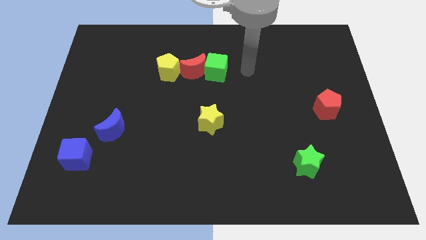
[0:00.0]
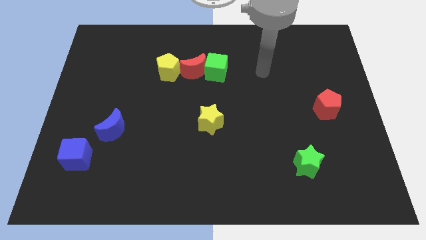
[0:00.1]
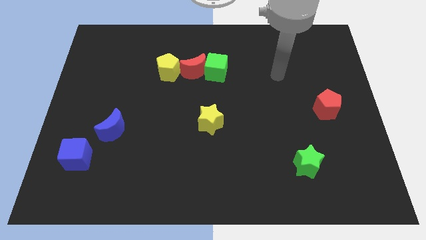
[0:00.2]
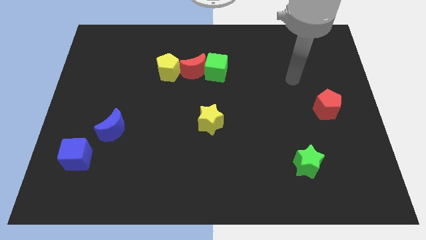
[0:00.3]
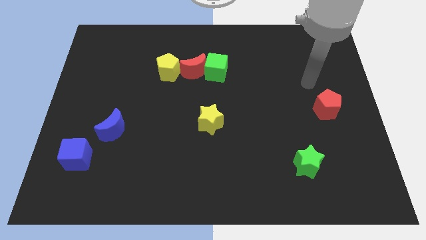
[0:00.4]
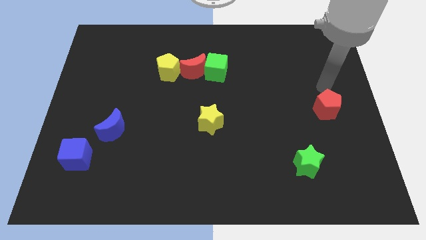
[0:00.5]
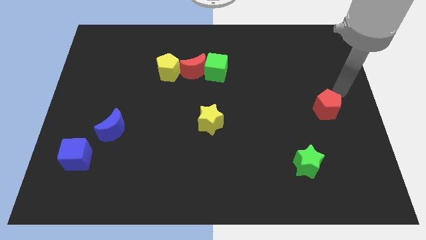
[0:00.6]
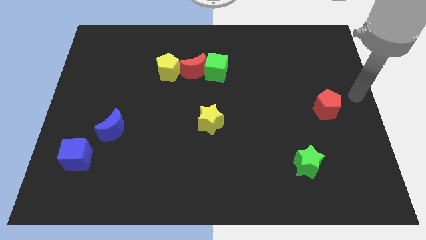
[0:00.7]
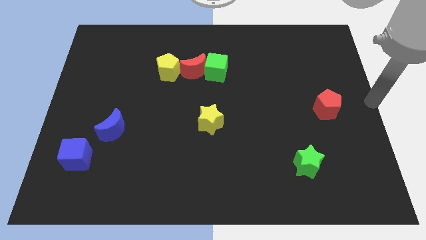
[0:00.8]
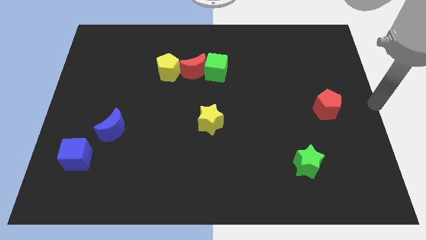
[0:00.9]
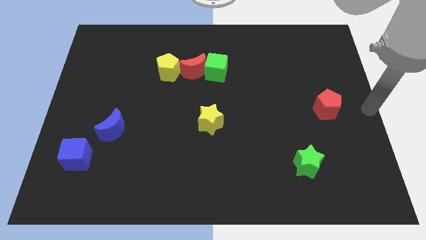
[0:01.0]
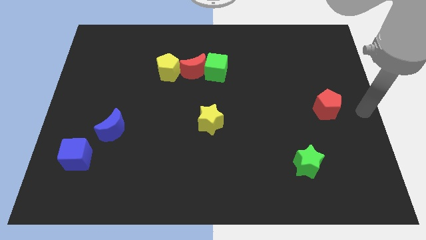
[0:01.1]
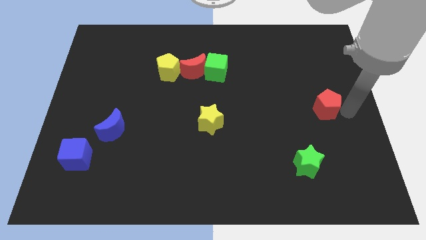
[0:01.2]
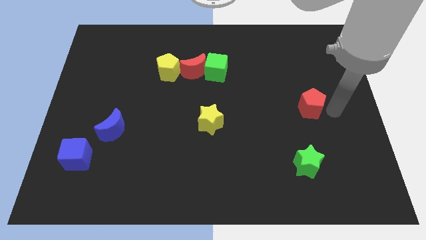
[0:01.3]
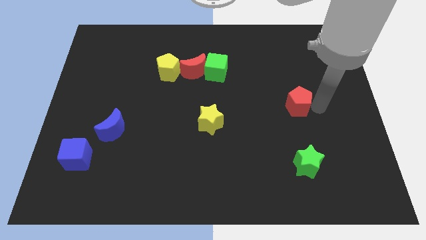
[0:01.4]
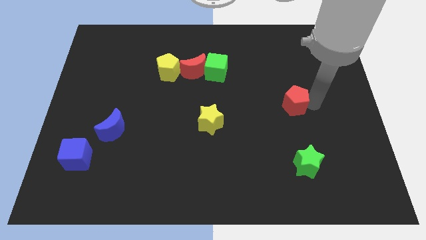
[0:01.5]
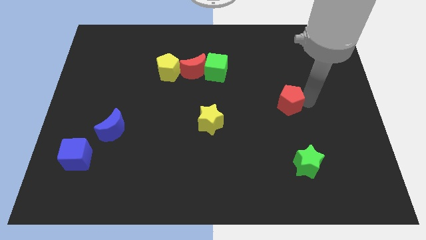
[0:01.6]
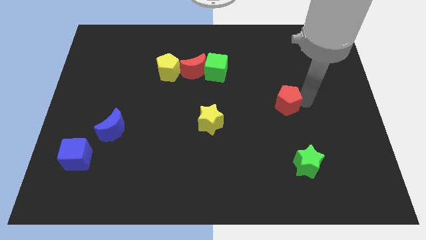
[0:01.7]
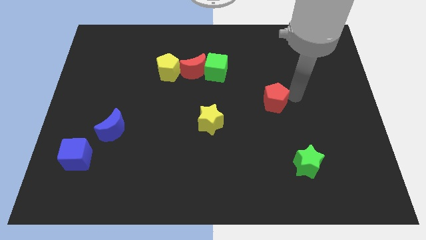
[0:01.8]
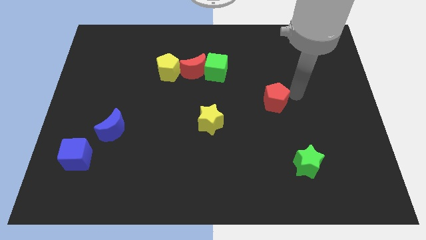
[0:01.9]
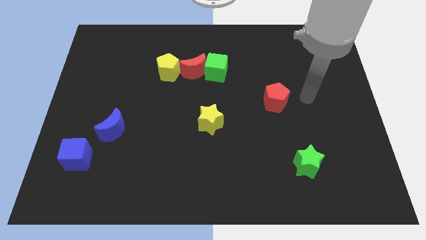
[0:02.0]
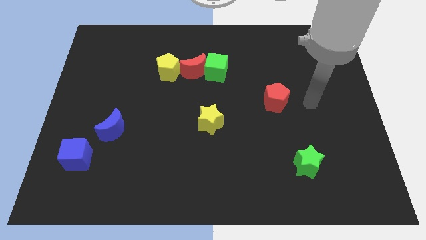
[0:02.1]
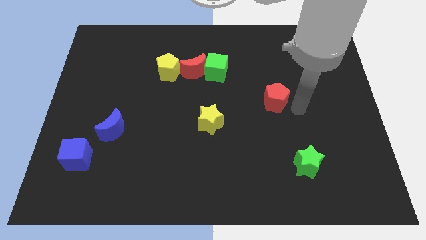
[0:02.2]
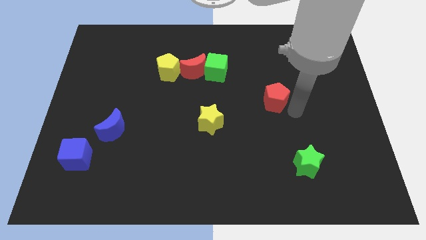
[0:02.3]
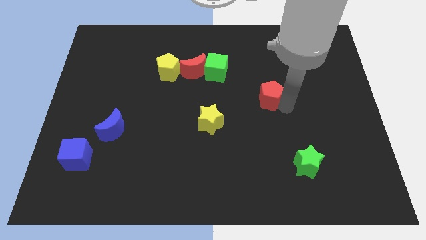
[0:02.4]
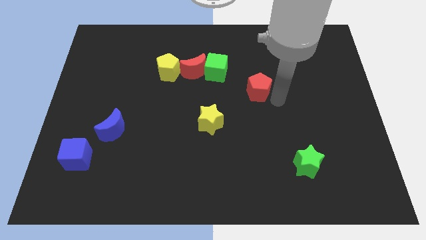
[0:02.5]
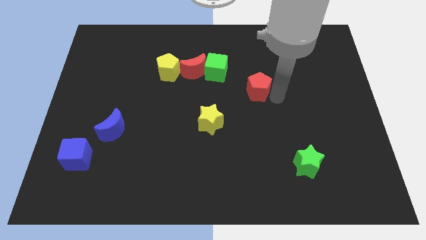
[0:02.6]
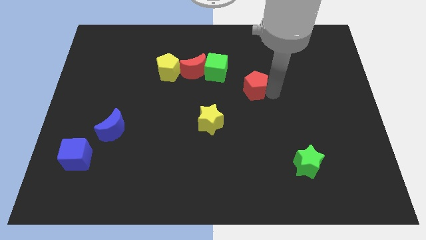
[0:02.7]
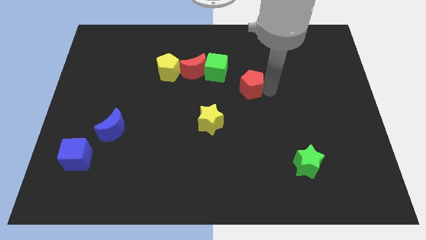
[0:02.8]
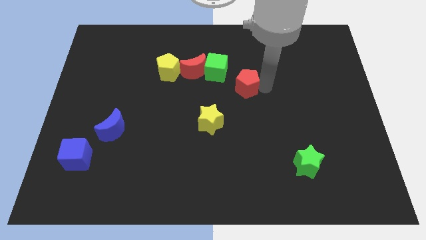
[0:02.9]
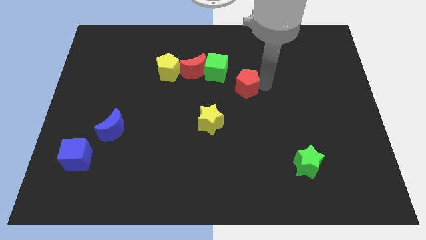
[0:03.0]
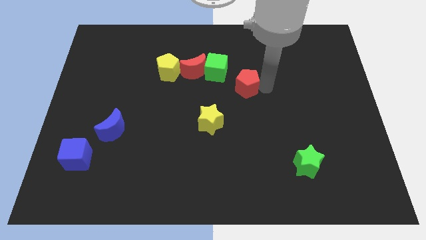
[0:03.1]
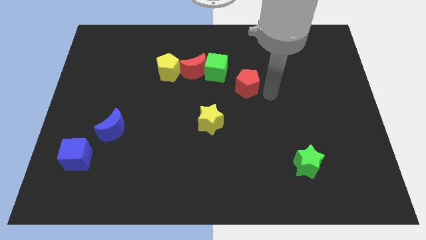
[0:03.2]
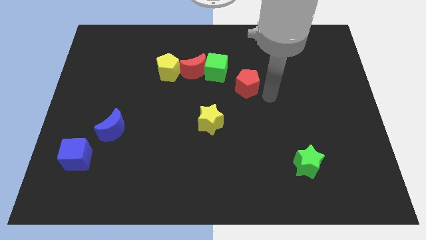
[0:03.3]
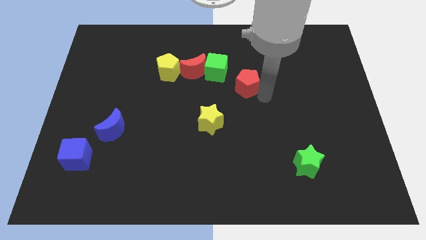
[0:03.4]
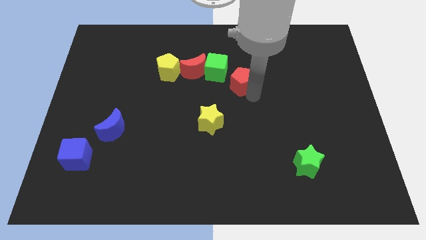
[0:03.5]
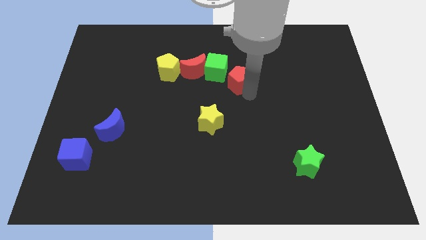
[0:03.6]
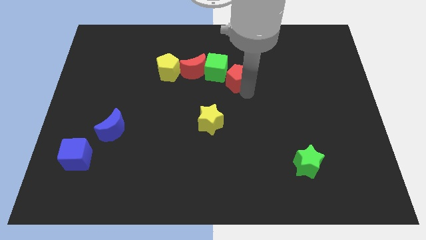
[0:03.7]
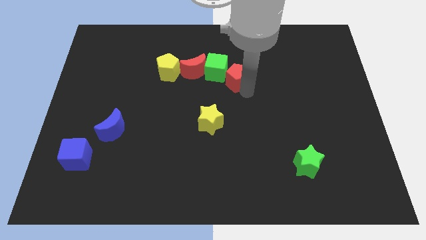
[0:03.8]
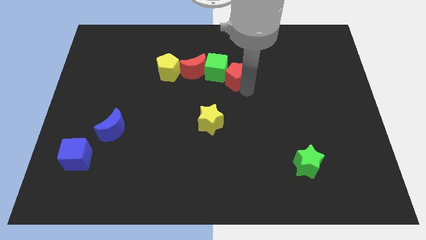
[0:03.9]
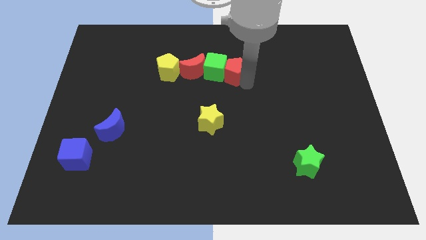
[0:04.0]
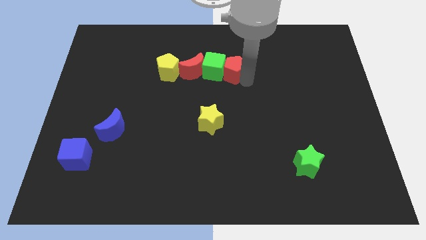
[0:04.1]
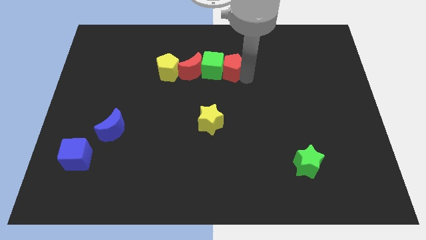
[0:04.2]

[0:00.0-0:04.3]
make a horizontal line with the red pentagon green cube red moon and yellow pentagon

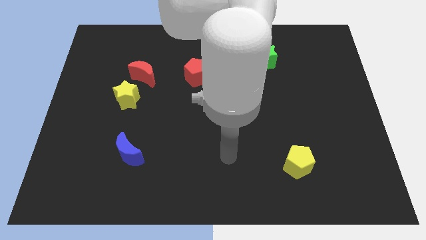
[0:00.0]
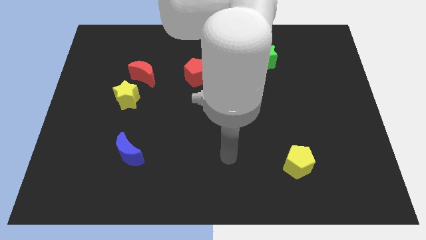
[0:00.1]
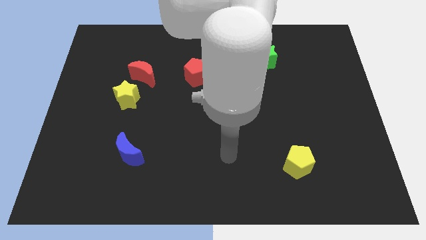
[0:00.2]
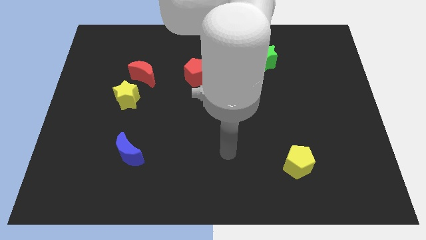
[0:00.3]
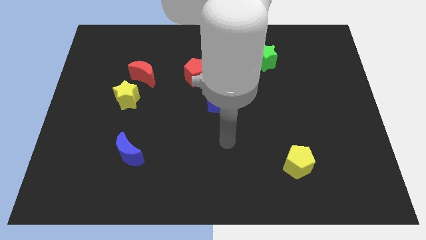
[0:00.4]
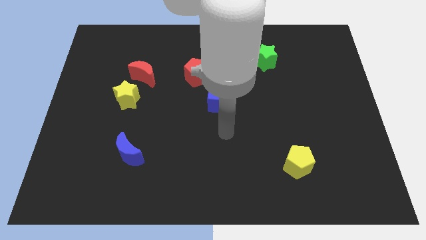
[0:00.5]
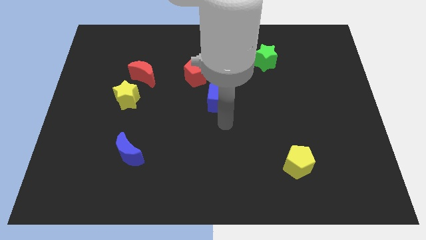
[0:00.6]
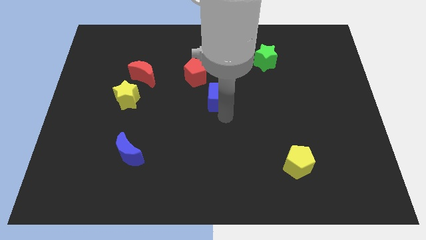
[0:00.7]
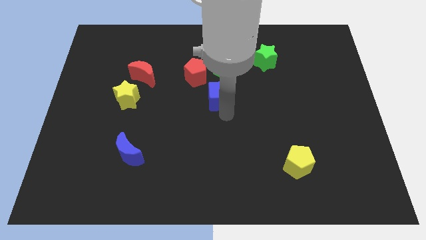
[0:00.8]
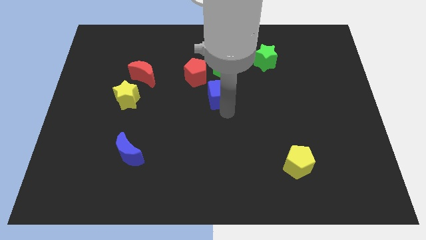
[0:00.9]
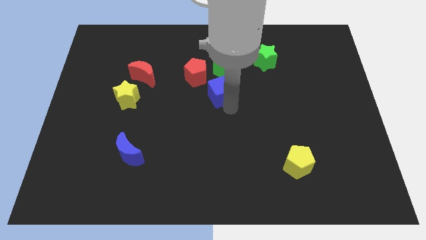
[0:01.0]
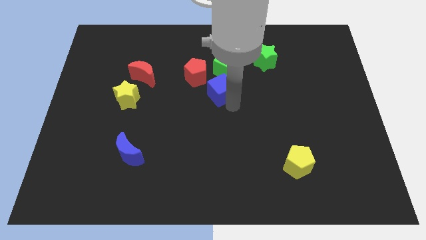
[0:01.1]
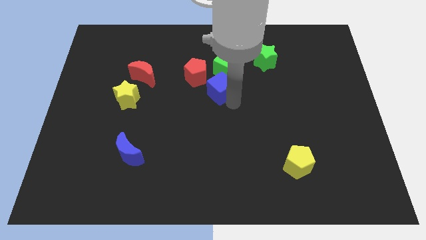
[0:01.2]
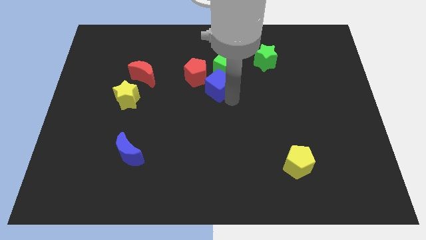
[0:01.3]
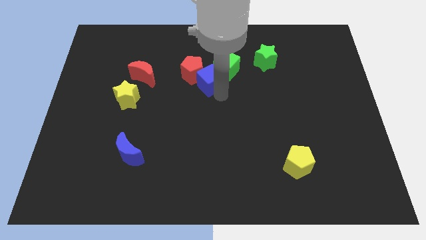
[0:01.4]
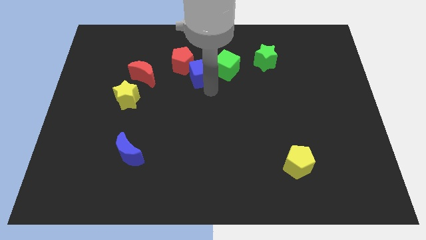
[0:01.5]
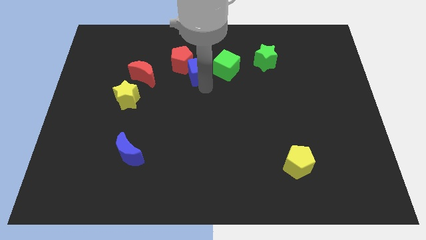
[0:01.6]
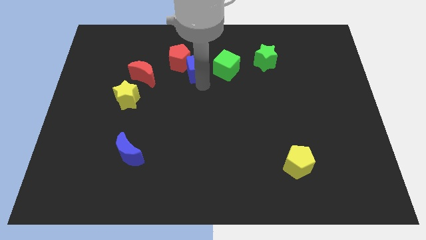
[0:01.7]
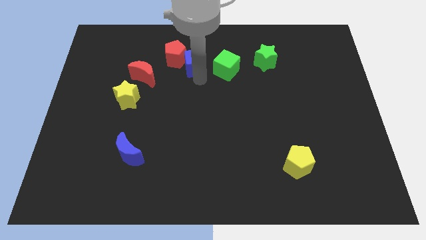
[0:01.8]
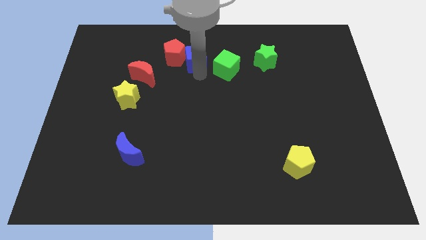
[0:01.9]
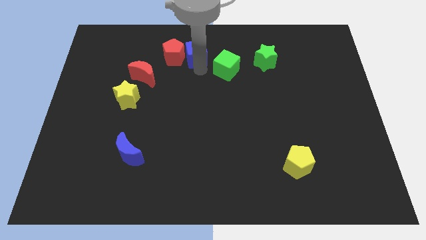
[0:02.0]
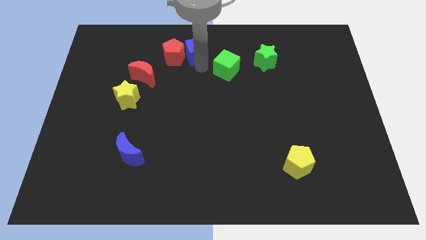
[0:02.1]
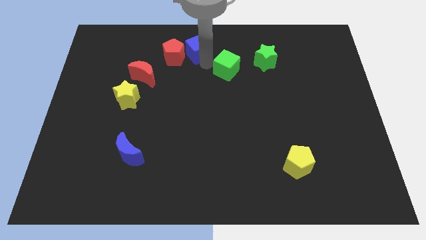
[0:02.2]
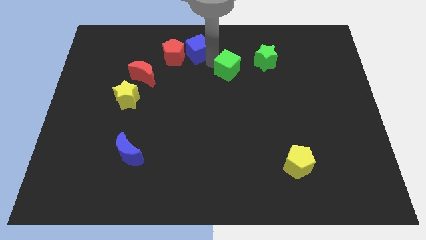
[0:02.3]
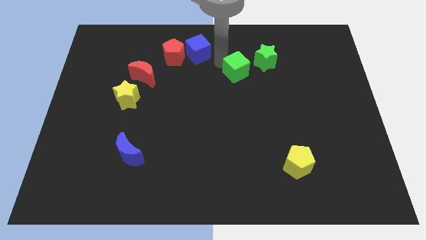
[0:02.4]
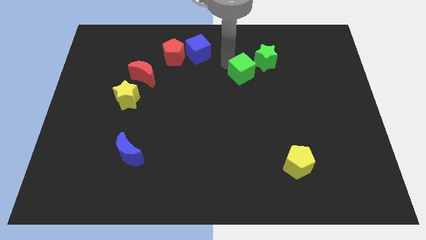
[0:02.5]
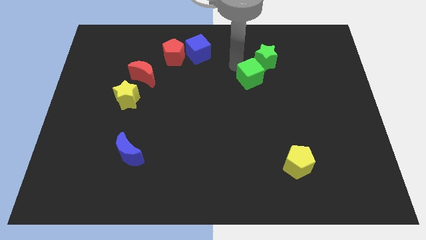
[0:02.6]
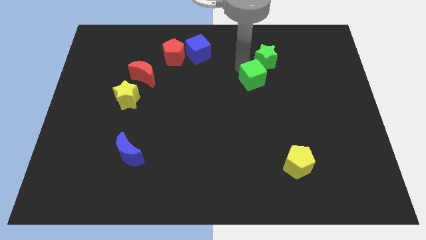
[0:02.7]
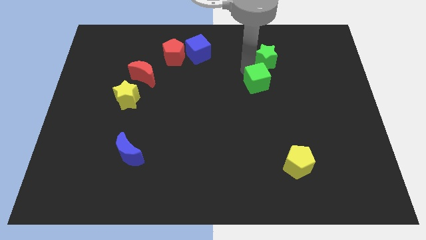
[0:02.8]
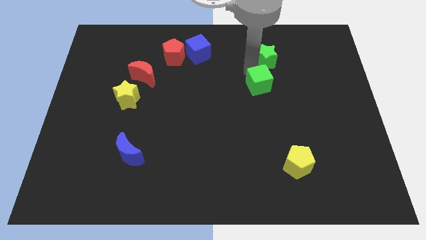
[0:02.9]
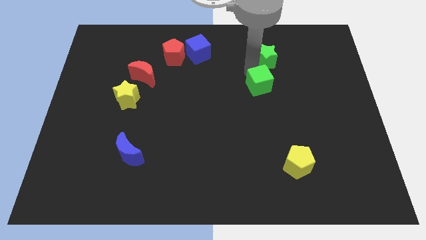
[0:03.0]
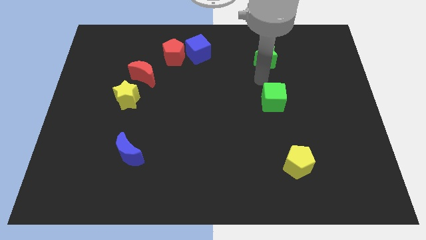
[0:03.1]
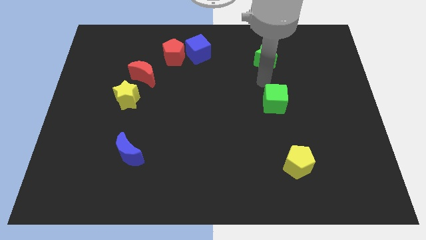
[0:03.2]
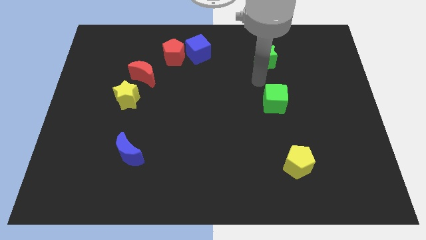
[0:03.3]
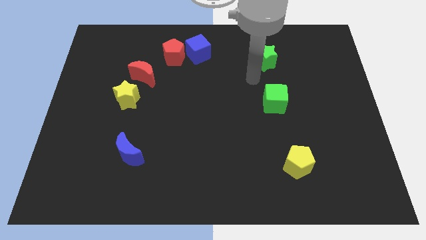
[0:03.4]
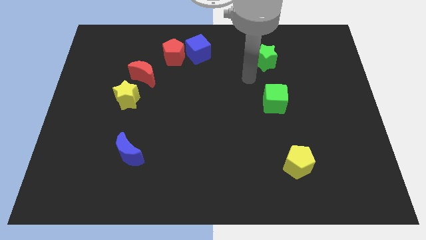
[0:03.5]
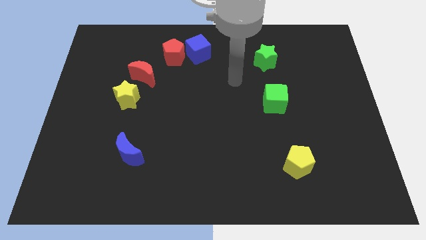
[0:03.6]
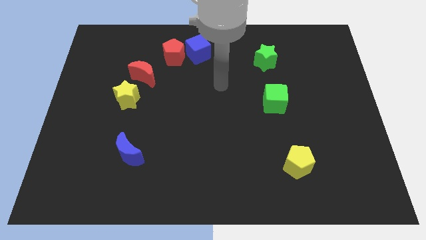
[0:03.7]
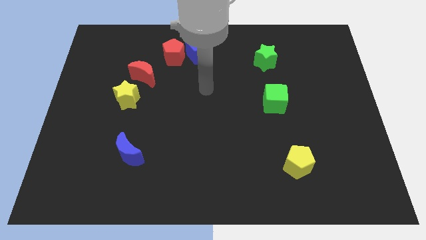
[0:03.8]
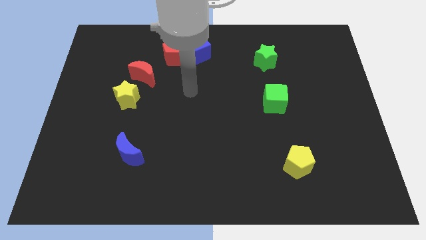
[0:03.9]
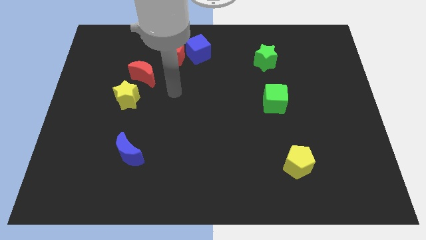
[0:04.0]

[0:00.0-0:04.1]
place the green cube above the yellow pentagon

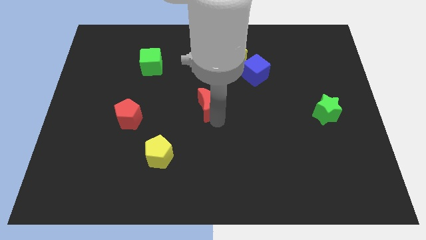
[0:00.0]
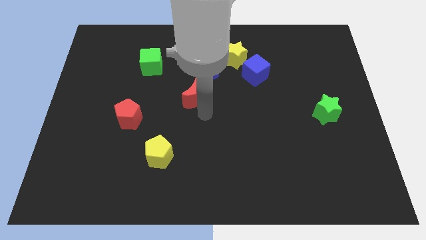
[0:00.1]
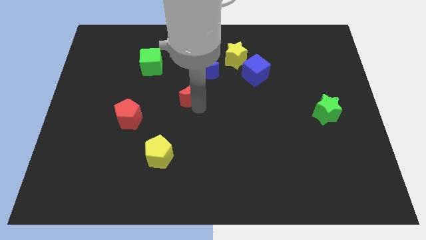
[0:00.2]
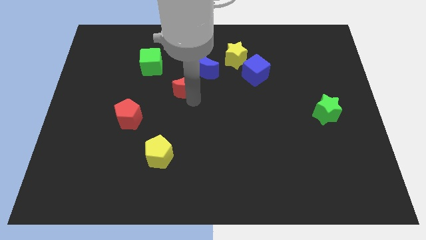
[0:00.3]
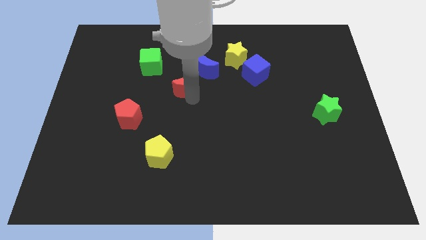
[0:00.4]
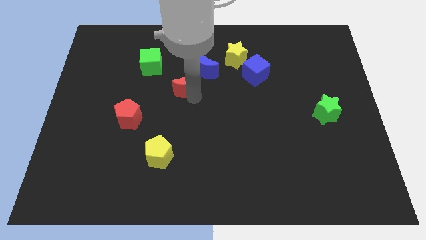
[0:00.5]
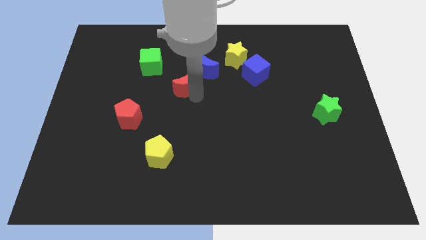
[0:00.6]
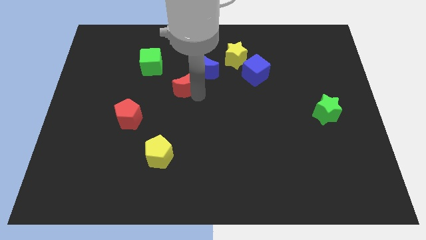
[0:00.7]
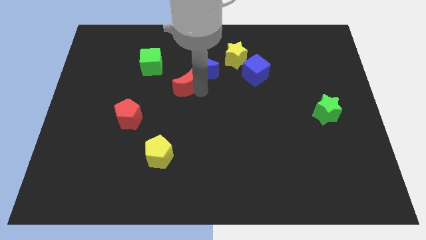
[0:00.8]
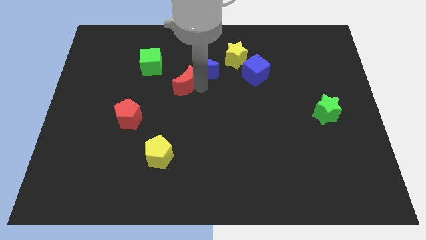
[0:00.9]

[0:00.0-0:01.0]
move red moon right below the green cube
